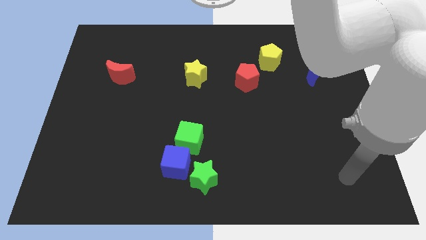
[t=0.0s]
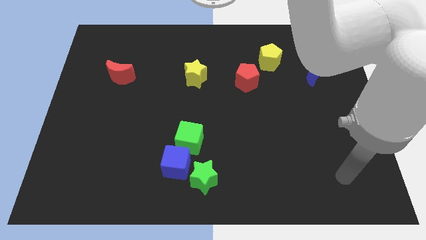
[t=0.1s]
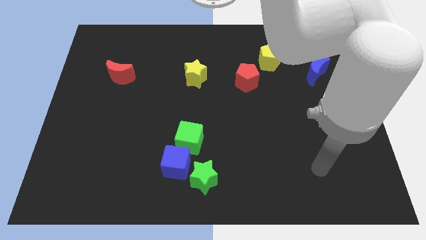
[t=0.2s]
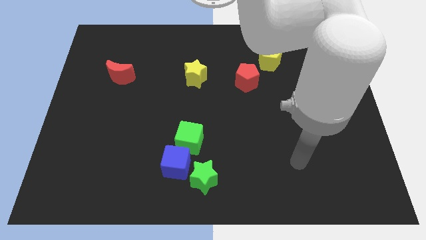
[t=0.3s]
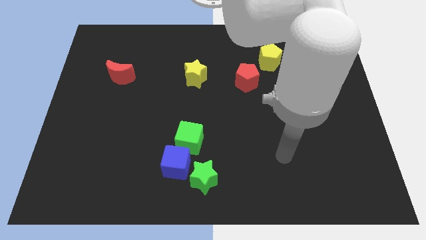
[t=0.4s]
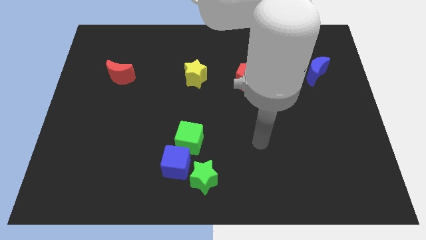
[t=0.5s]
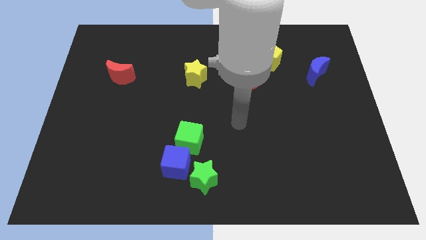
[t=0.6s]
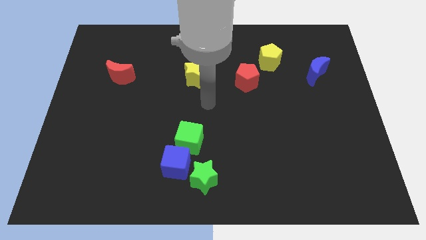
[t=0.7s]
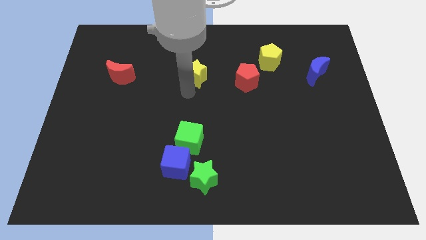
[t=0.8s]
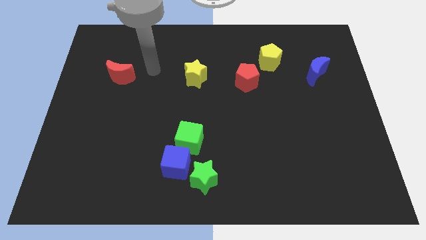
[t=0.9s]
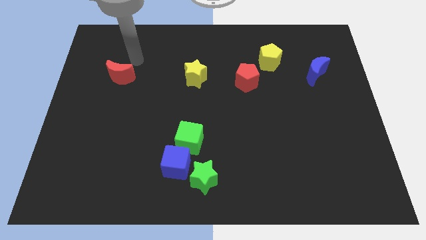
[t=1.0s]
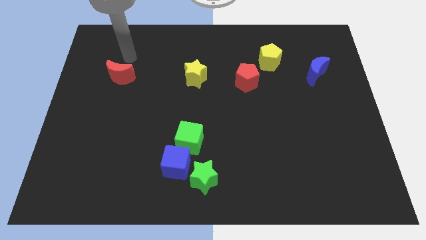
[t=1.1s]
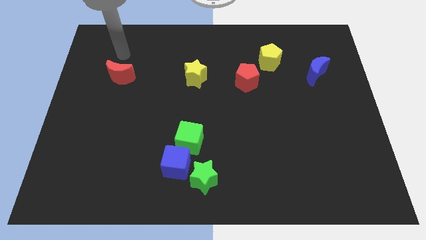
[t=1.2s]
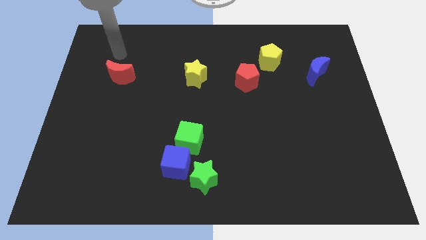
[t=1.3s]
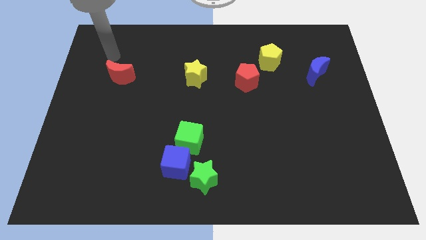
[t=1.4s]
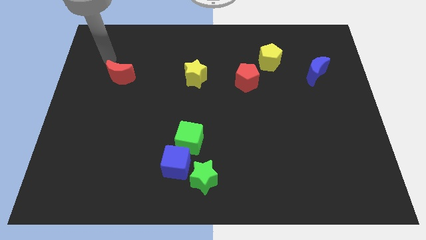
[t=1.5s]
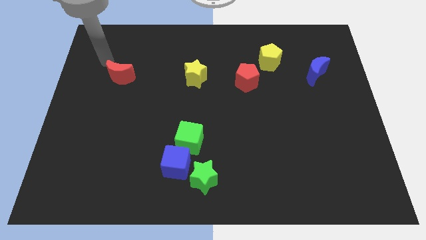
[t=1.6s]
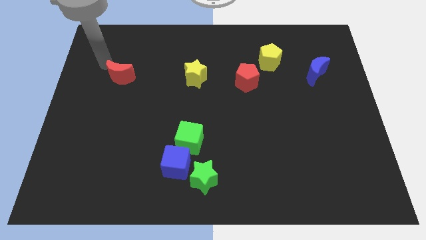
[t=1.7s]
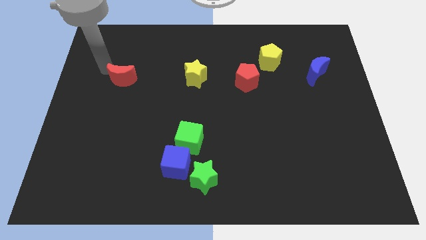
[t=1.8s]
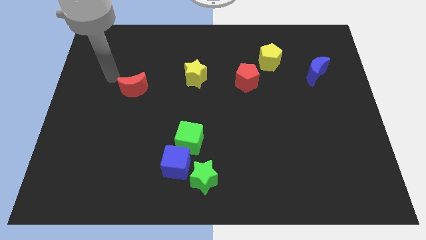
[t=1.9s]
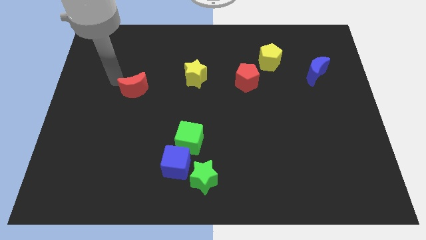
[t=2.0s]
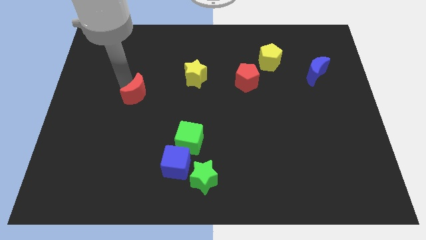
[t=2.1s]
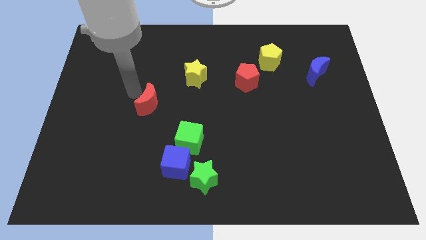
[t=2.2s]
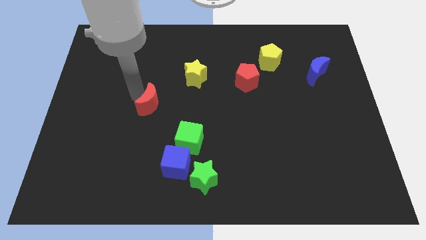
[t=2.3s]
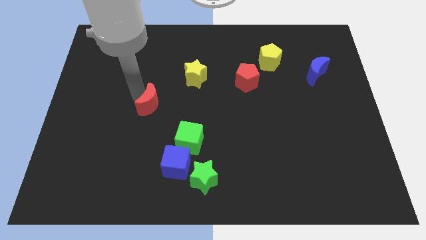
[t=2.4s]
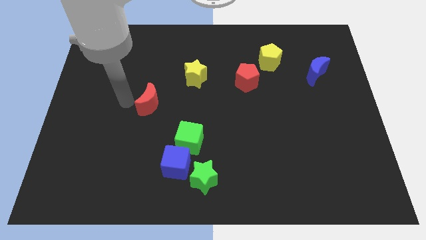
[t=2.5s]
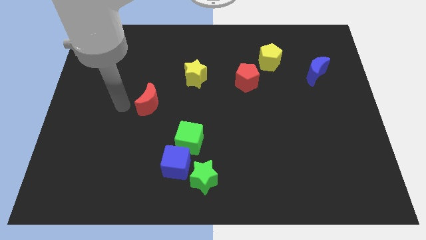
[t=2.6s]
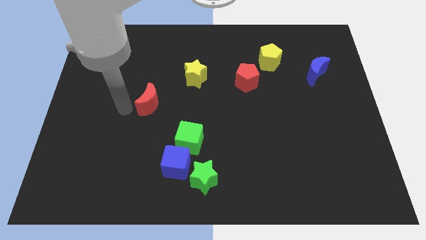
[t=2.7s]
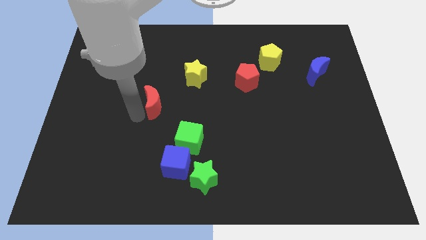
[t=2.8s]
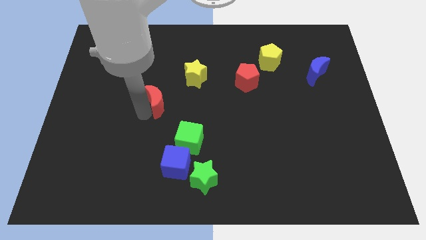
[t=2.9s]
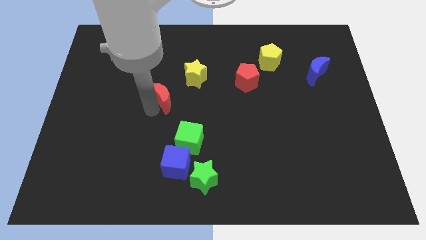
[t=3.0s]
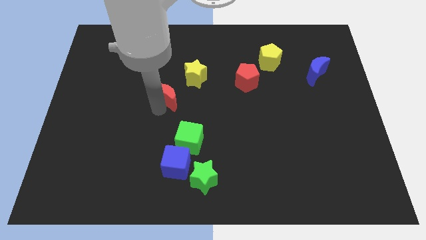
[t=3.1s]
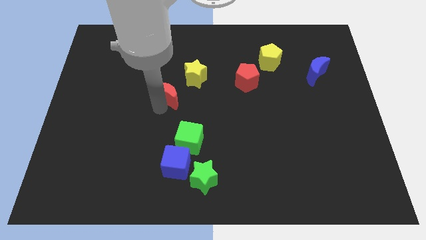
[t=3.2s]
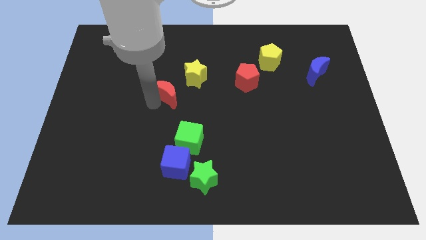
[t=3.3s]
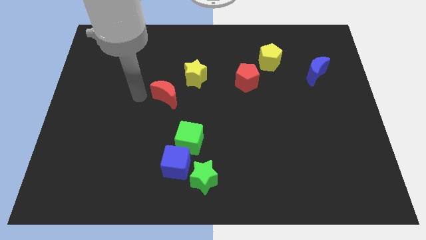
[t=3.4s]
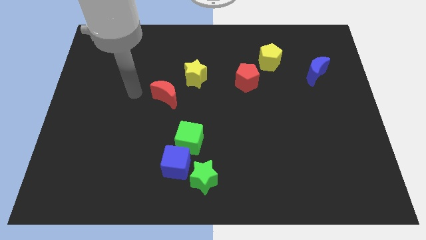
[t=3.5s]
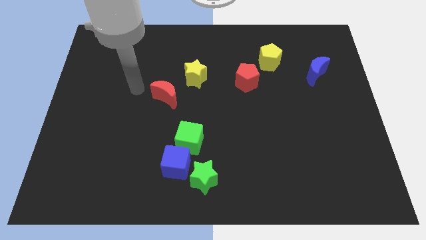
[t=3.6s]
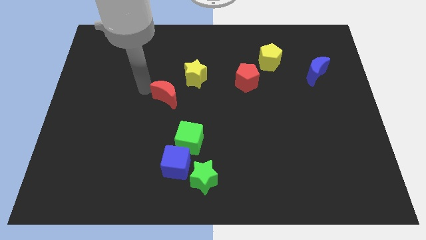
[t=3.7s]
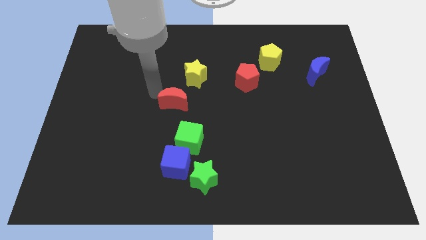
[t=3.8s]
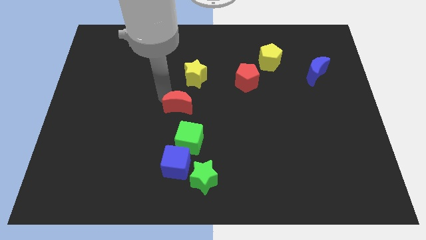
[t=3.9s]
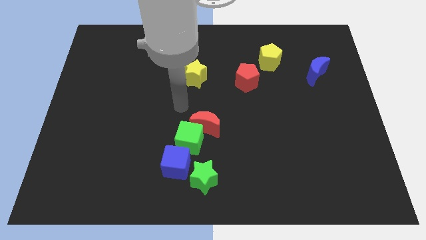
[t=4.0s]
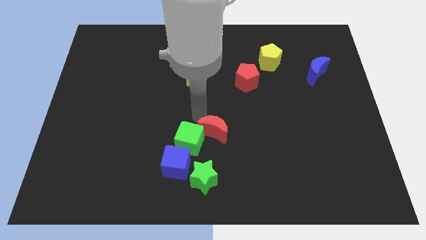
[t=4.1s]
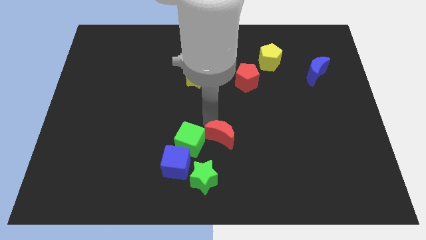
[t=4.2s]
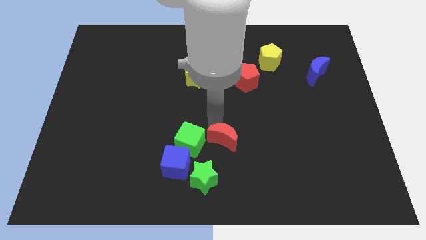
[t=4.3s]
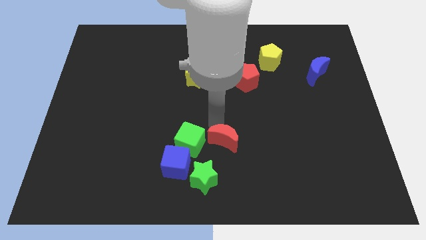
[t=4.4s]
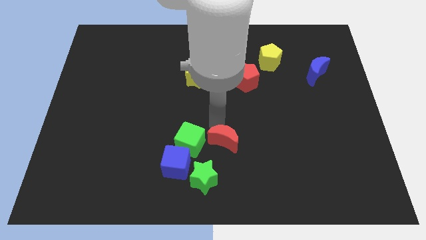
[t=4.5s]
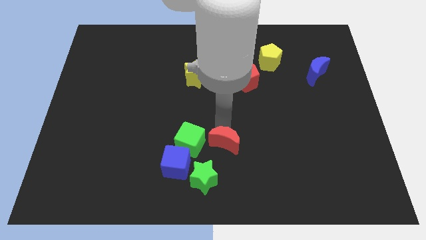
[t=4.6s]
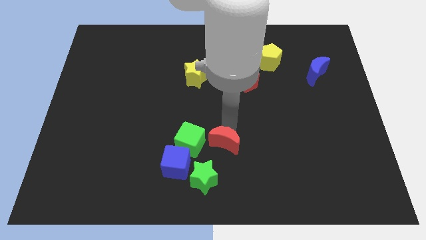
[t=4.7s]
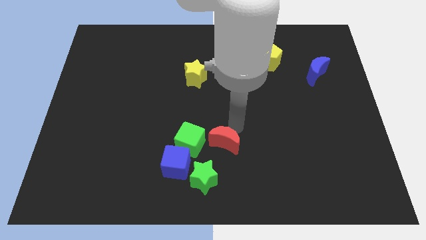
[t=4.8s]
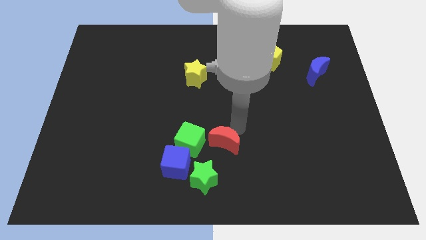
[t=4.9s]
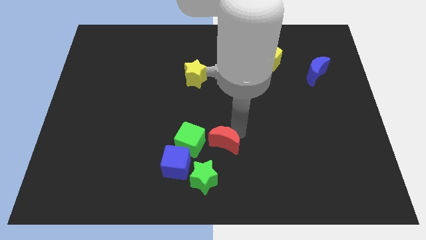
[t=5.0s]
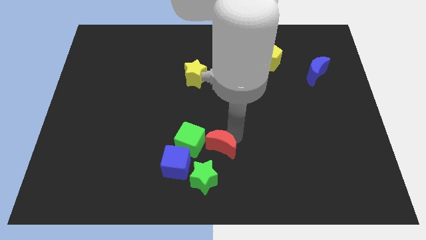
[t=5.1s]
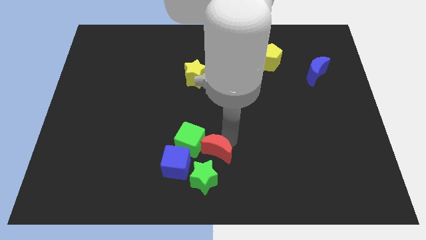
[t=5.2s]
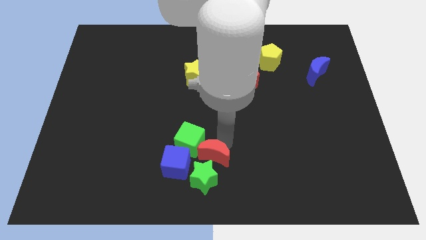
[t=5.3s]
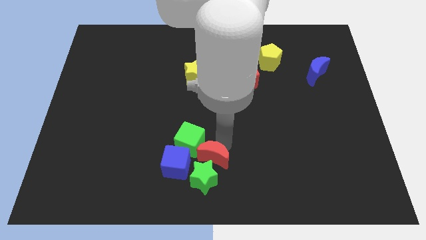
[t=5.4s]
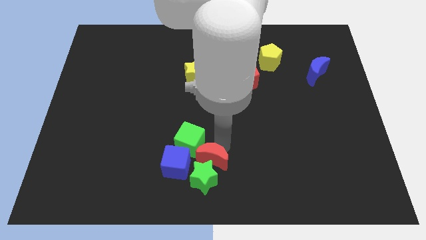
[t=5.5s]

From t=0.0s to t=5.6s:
push the red moon next to the green star

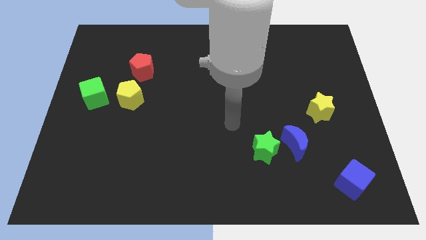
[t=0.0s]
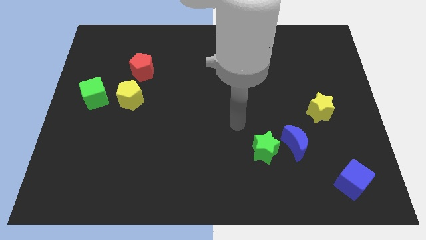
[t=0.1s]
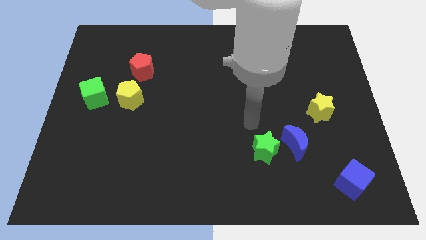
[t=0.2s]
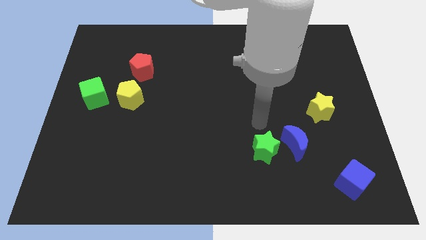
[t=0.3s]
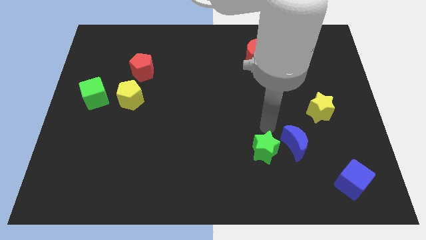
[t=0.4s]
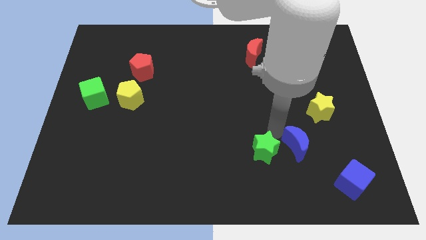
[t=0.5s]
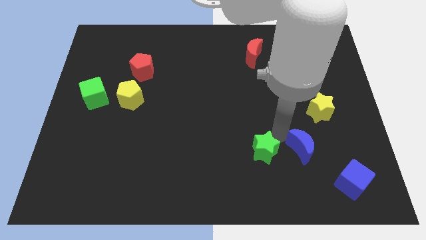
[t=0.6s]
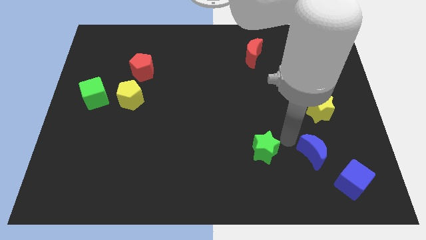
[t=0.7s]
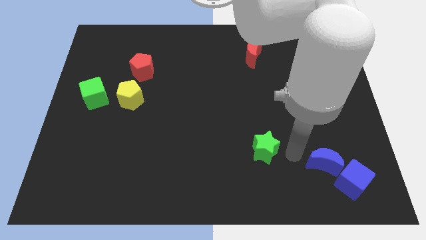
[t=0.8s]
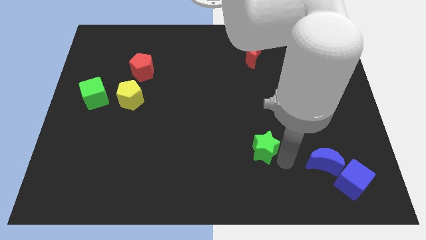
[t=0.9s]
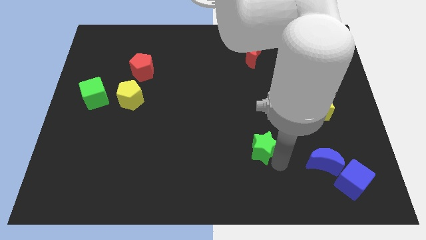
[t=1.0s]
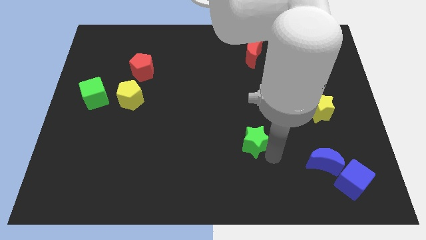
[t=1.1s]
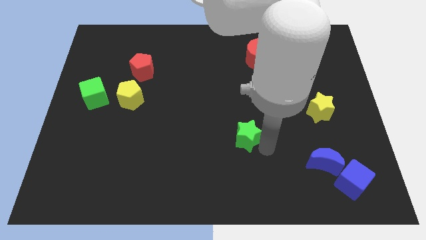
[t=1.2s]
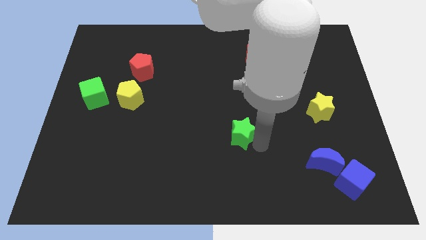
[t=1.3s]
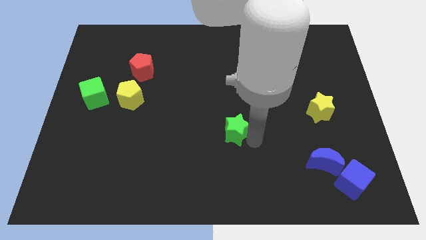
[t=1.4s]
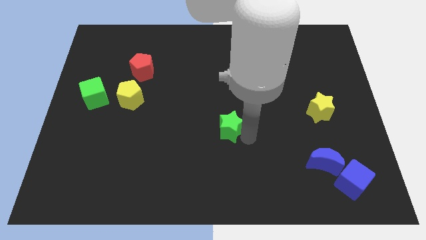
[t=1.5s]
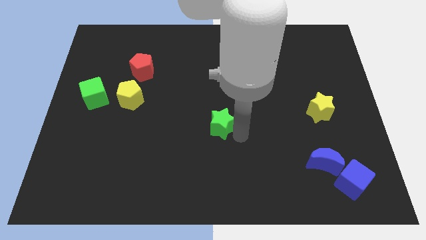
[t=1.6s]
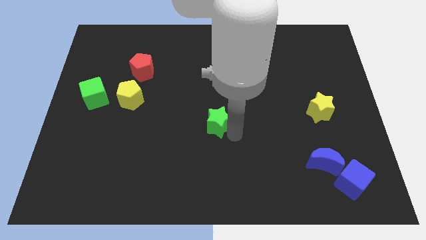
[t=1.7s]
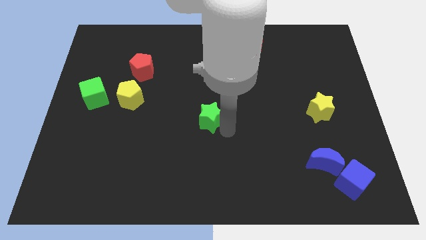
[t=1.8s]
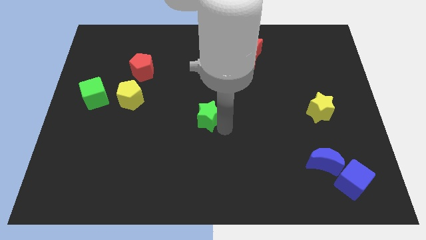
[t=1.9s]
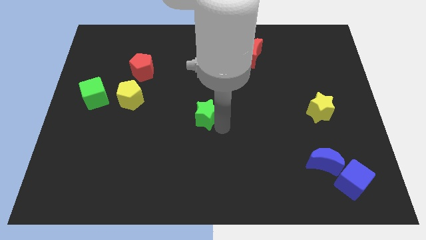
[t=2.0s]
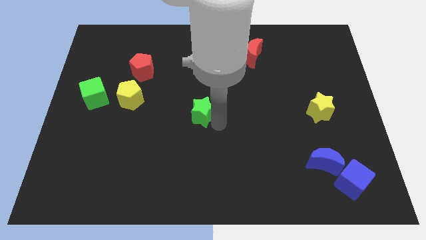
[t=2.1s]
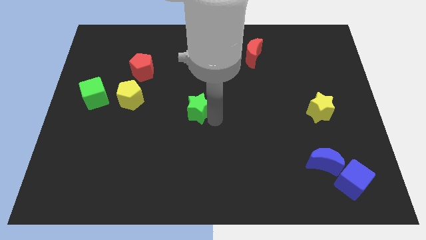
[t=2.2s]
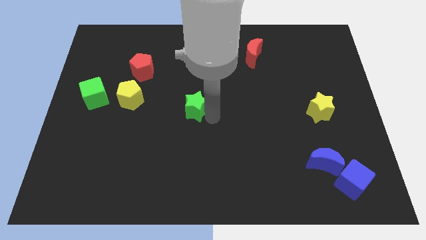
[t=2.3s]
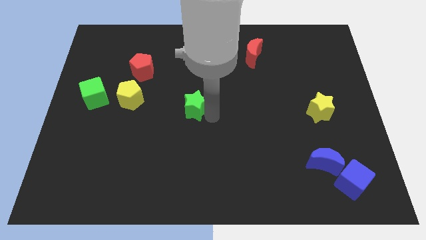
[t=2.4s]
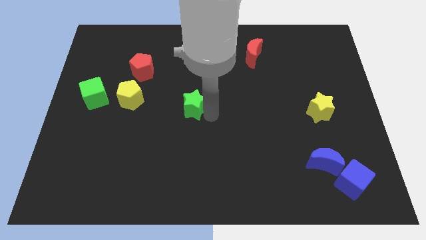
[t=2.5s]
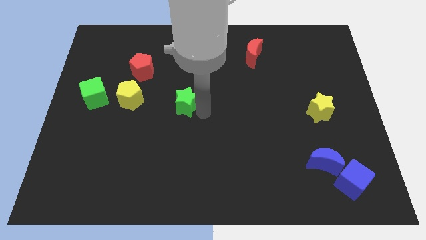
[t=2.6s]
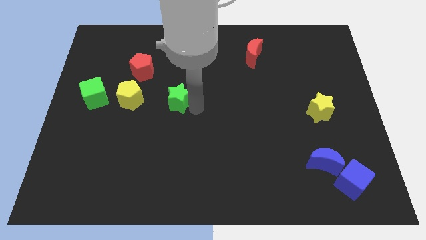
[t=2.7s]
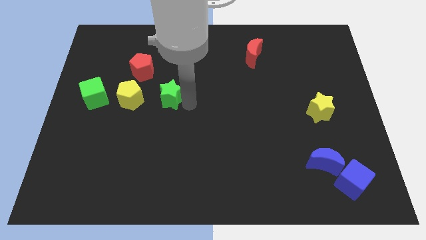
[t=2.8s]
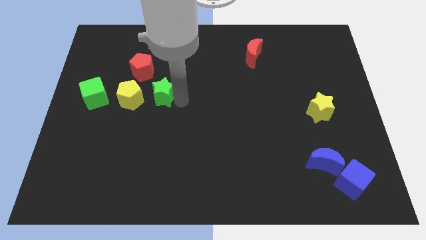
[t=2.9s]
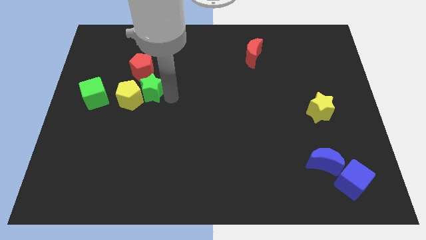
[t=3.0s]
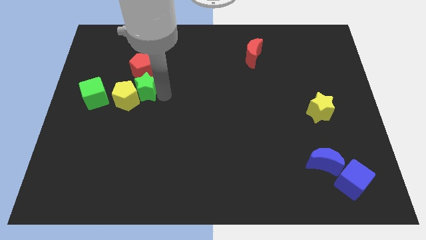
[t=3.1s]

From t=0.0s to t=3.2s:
put the green star next to the yellow pentagon
